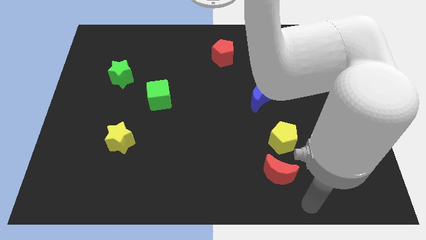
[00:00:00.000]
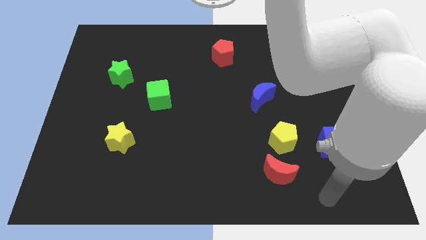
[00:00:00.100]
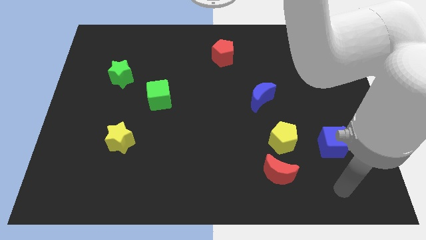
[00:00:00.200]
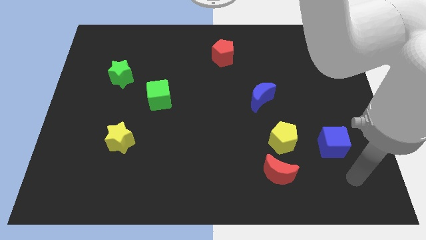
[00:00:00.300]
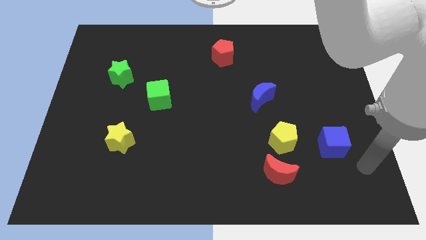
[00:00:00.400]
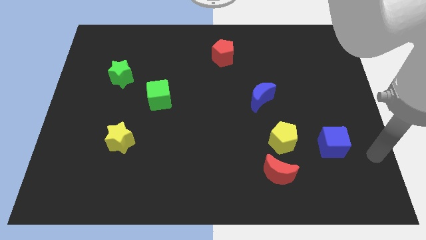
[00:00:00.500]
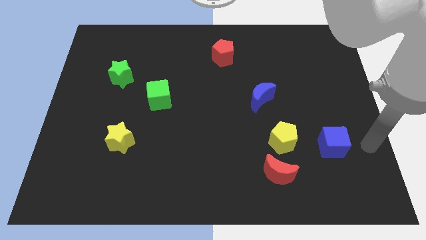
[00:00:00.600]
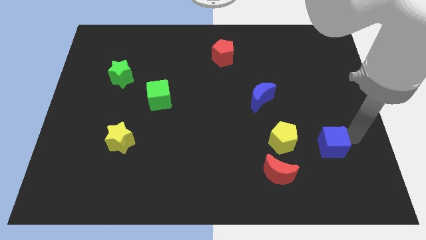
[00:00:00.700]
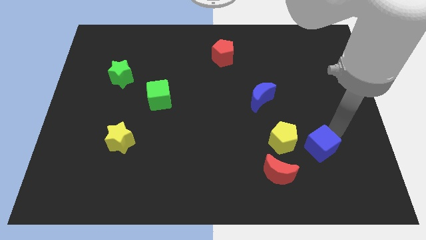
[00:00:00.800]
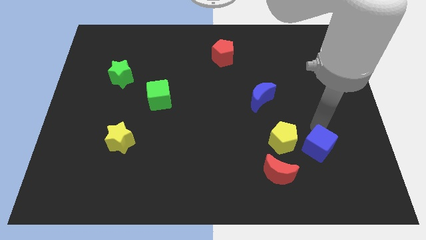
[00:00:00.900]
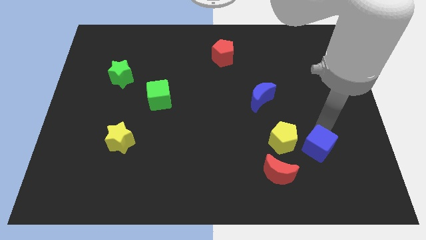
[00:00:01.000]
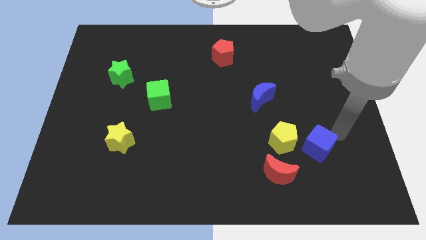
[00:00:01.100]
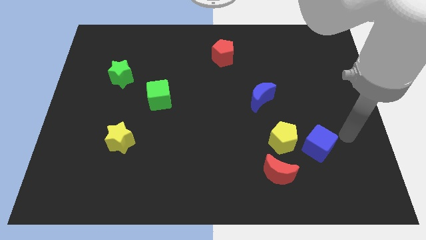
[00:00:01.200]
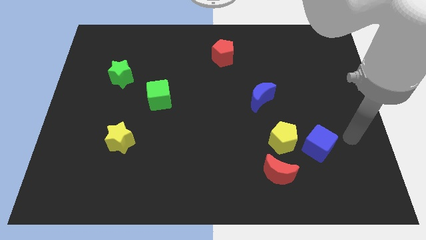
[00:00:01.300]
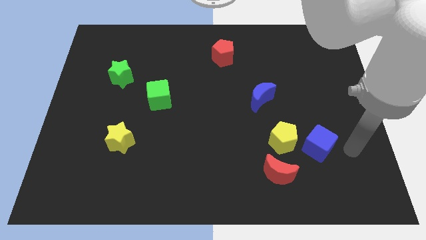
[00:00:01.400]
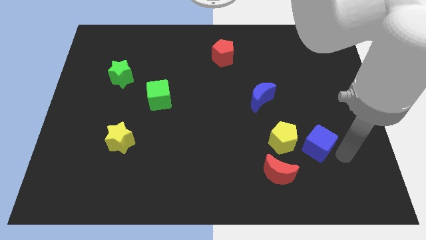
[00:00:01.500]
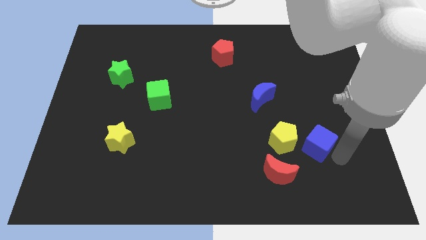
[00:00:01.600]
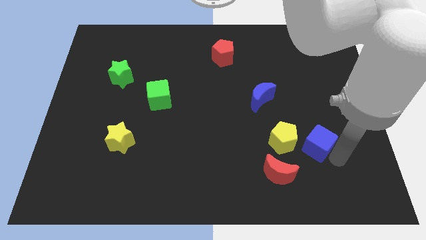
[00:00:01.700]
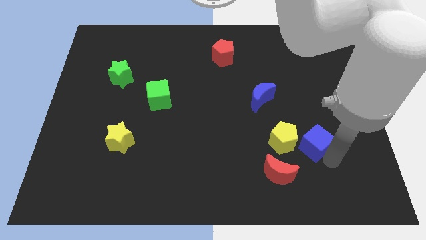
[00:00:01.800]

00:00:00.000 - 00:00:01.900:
move blue cube towards yellow pentagon

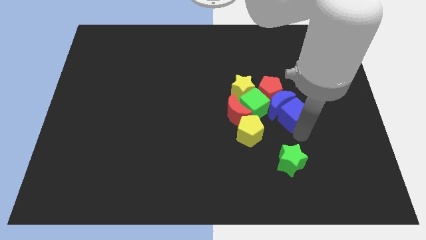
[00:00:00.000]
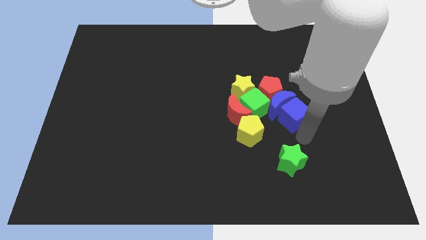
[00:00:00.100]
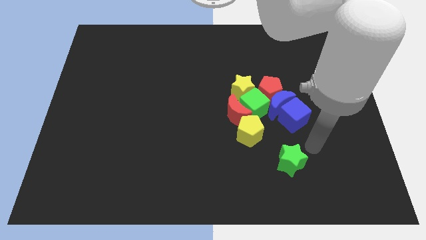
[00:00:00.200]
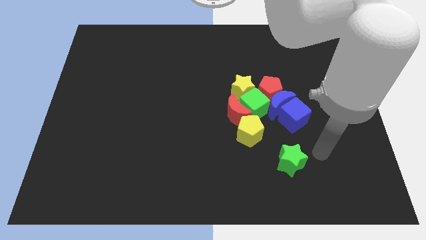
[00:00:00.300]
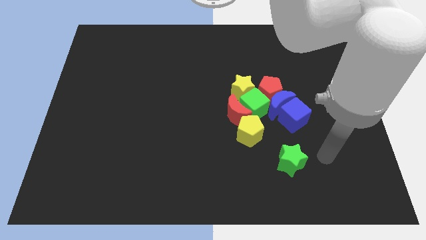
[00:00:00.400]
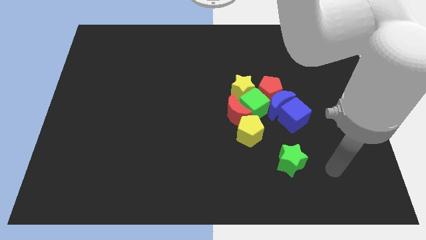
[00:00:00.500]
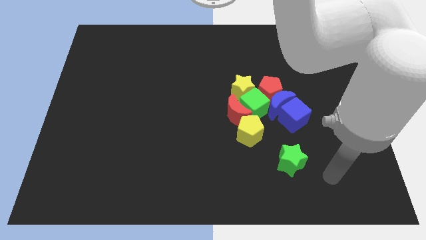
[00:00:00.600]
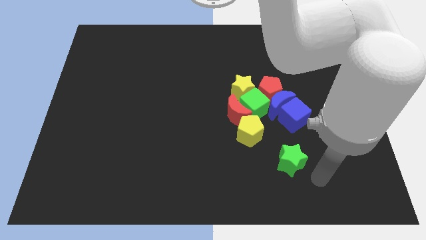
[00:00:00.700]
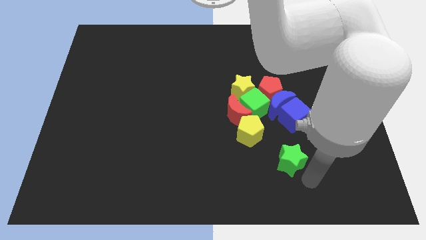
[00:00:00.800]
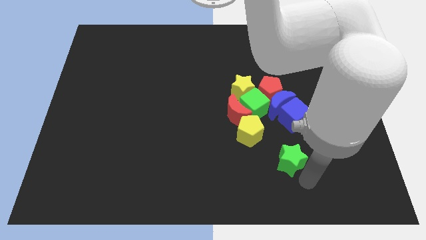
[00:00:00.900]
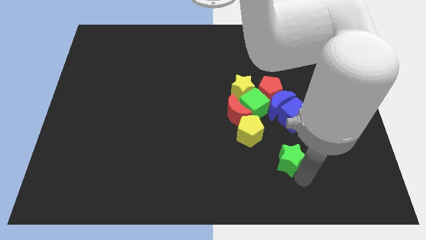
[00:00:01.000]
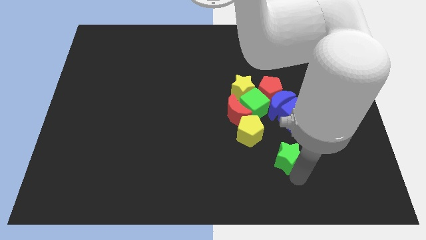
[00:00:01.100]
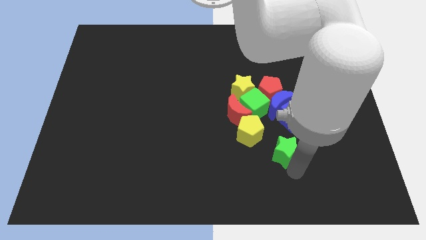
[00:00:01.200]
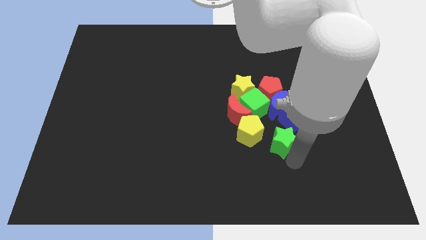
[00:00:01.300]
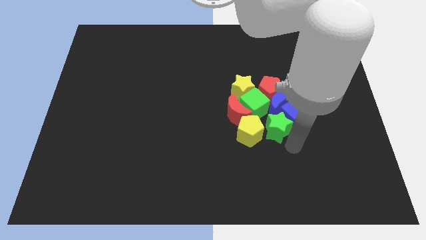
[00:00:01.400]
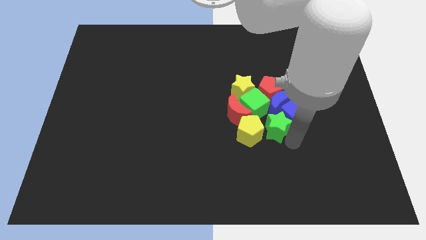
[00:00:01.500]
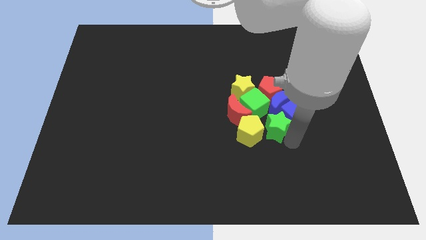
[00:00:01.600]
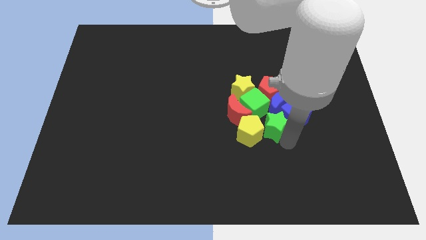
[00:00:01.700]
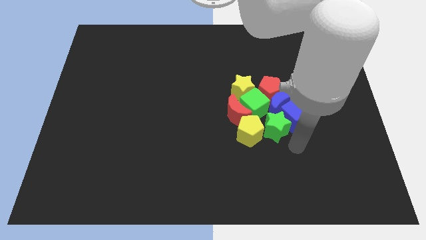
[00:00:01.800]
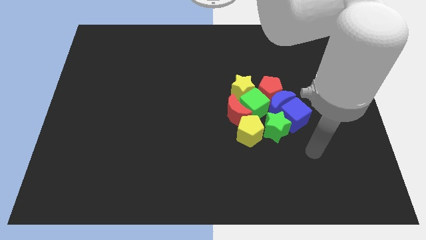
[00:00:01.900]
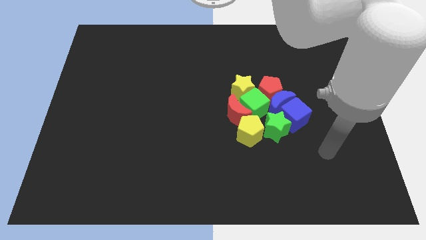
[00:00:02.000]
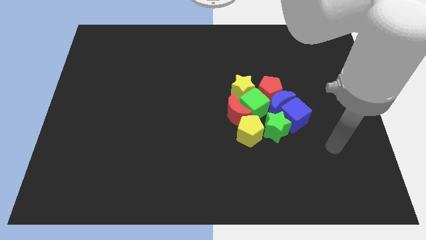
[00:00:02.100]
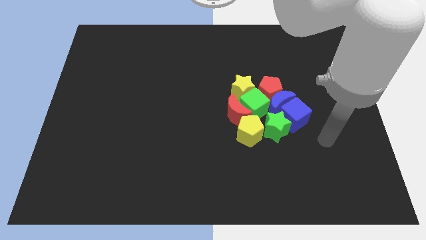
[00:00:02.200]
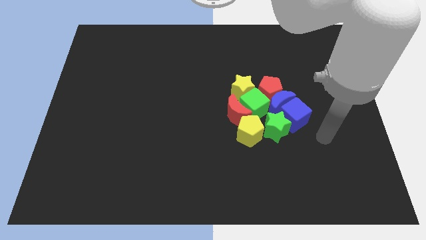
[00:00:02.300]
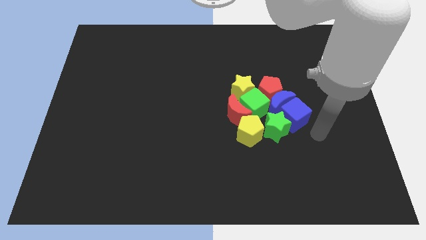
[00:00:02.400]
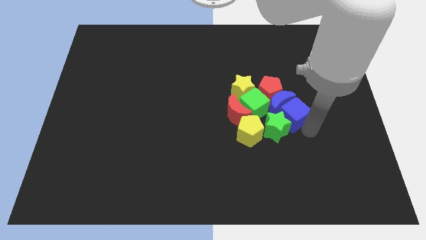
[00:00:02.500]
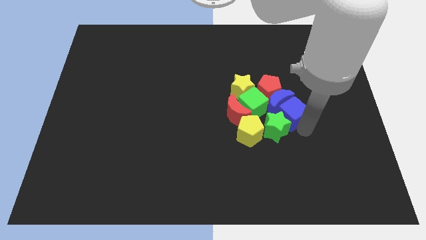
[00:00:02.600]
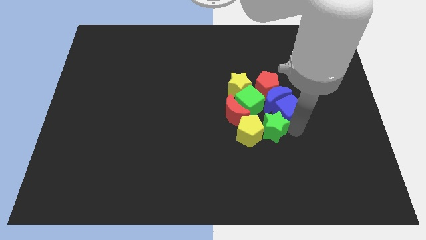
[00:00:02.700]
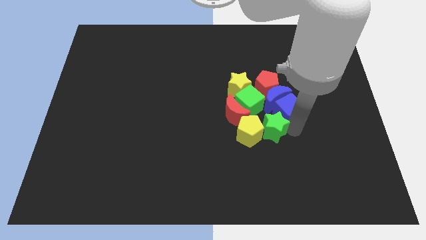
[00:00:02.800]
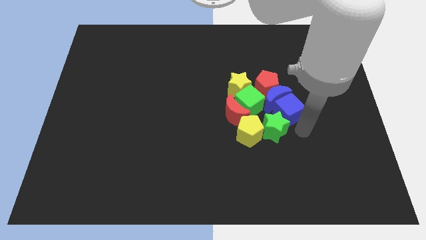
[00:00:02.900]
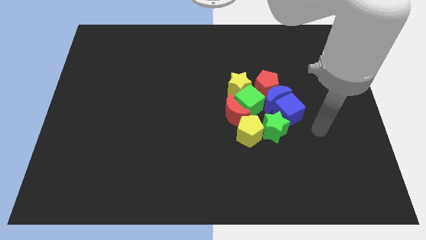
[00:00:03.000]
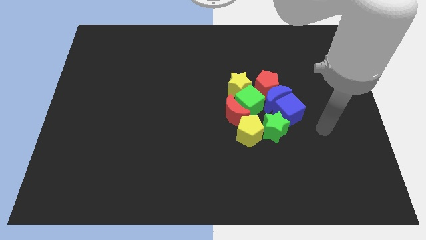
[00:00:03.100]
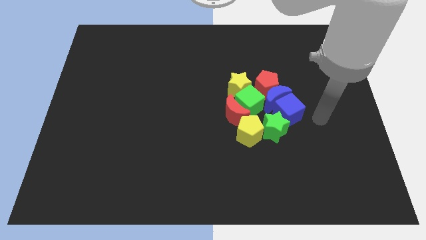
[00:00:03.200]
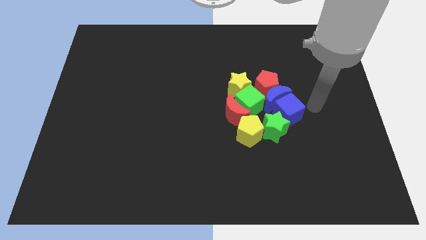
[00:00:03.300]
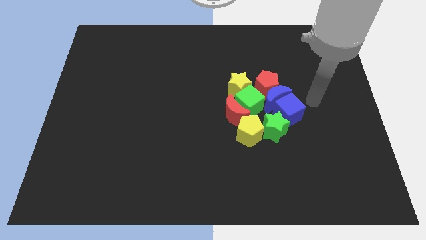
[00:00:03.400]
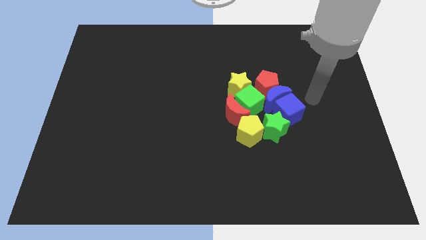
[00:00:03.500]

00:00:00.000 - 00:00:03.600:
move the green star slightly towards the top side of the board

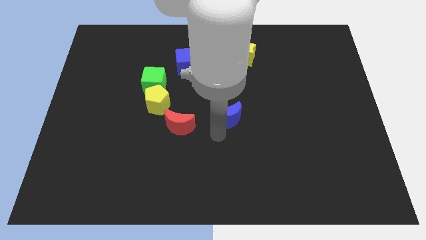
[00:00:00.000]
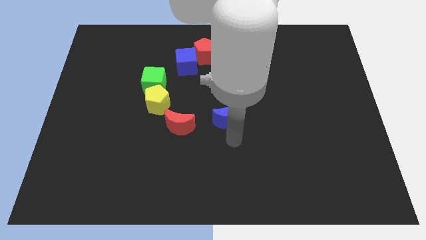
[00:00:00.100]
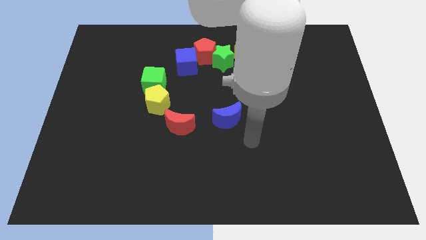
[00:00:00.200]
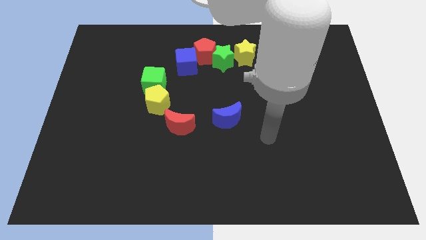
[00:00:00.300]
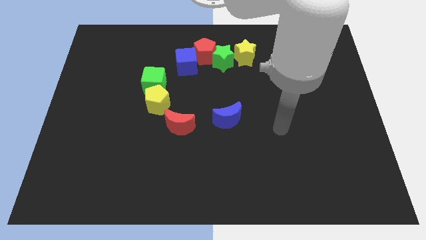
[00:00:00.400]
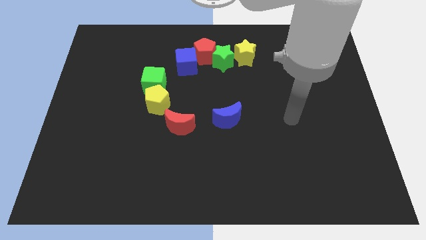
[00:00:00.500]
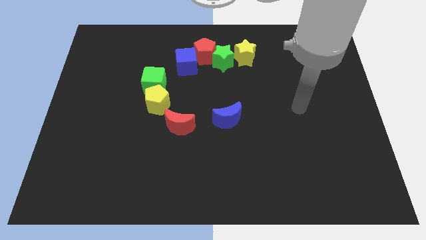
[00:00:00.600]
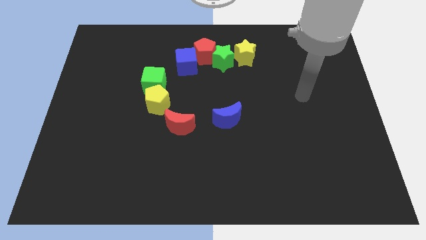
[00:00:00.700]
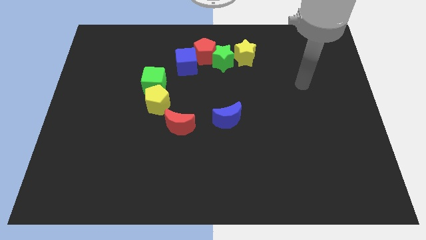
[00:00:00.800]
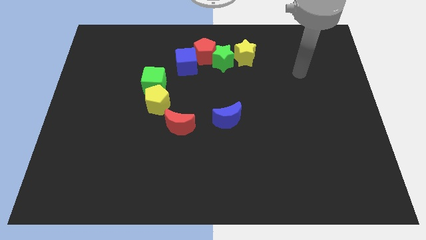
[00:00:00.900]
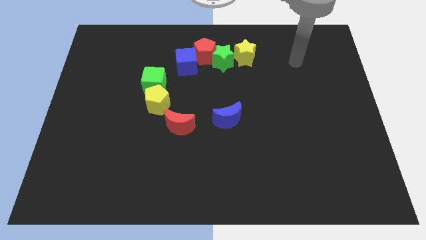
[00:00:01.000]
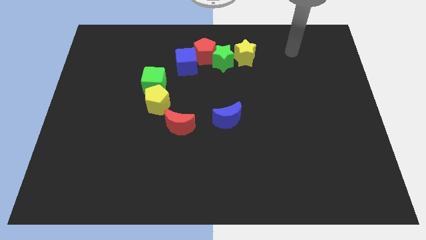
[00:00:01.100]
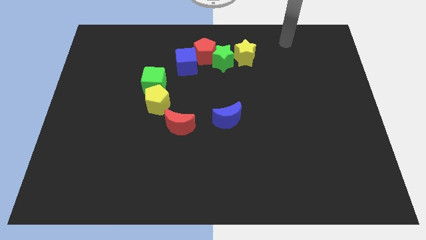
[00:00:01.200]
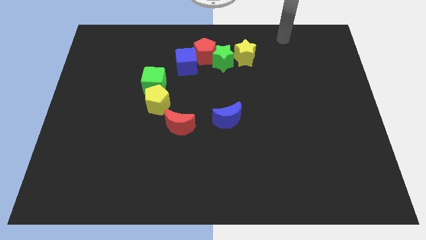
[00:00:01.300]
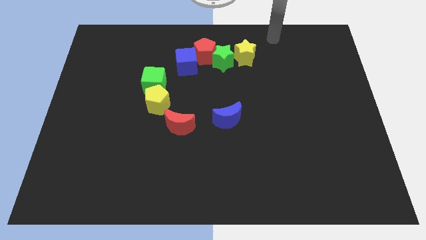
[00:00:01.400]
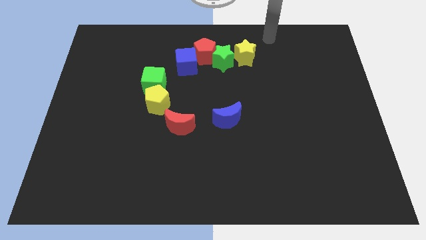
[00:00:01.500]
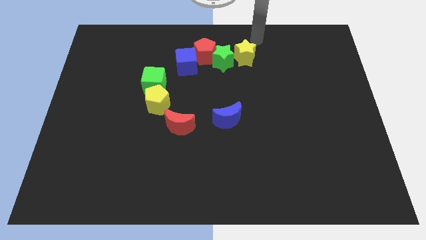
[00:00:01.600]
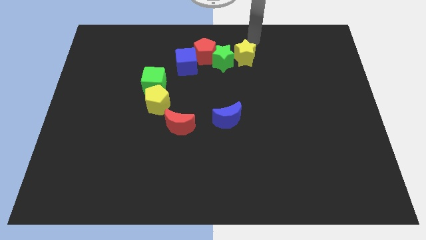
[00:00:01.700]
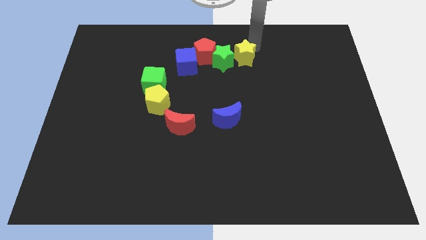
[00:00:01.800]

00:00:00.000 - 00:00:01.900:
move the arm top right of the yellow star

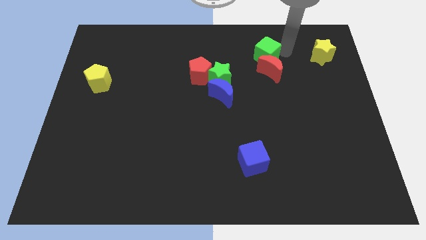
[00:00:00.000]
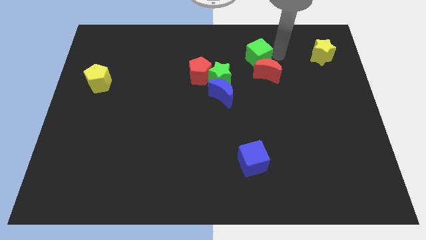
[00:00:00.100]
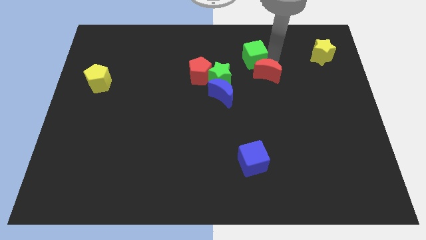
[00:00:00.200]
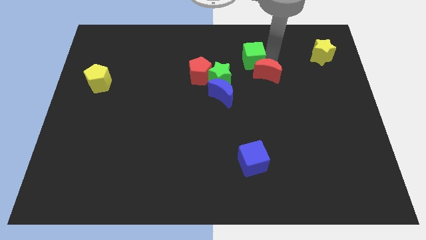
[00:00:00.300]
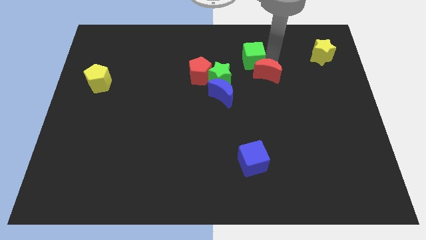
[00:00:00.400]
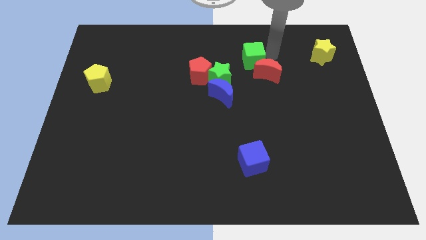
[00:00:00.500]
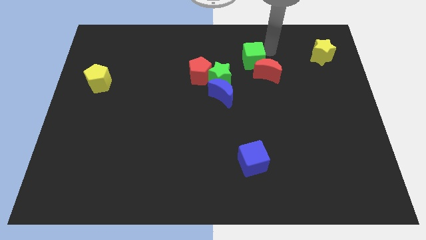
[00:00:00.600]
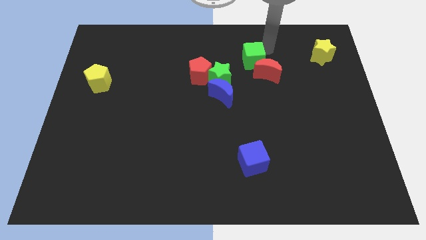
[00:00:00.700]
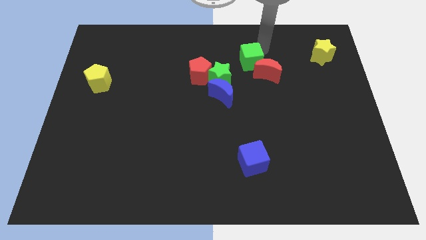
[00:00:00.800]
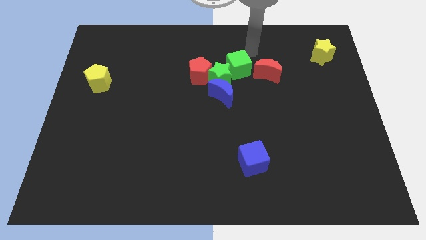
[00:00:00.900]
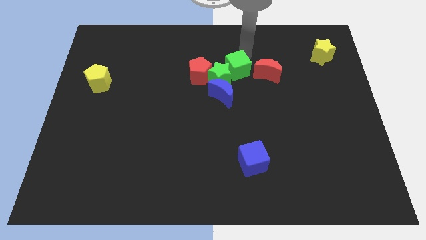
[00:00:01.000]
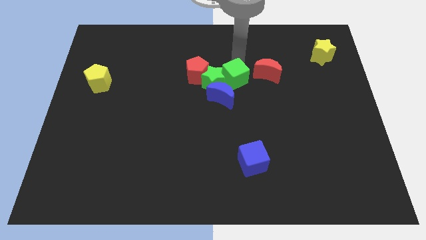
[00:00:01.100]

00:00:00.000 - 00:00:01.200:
move the green cube into the green star

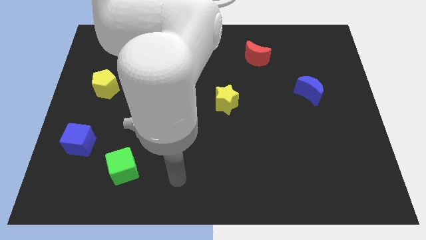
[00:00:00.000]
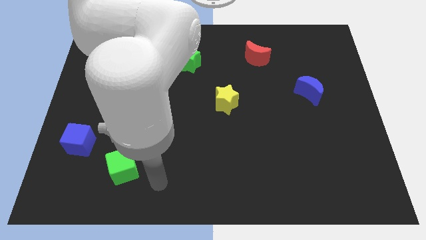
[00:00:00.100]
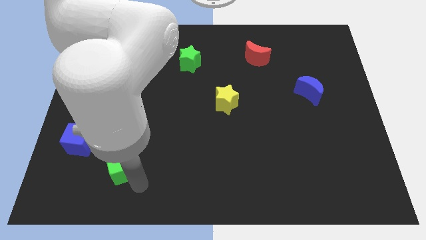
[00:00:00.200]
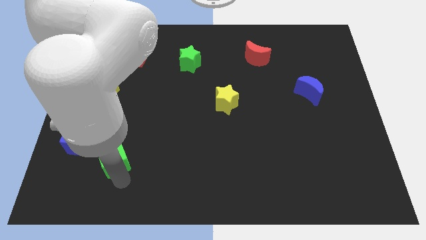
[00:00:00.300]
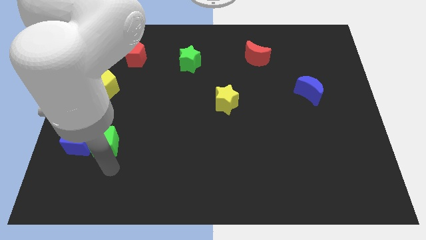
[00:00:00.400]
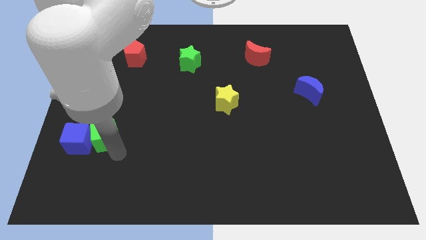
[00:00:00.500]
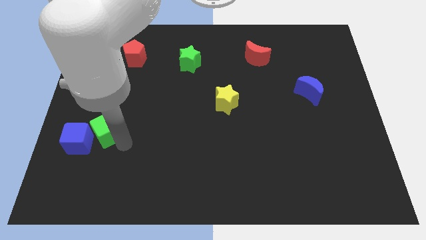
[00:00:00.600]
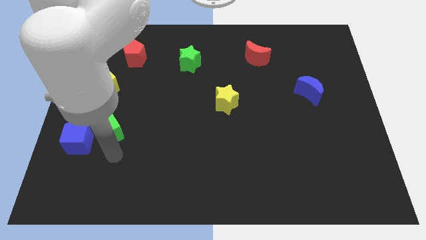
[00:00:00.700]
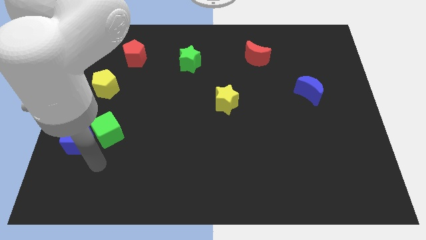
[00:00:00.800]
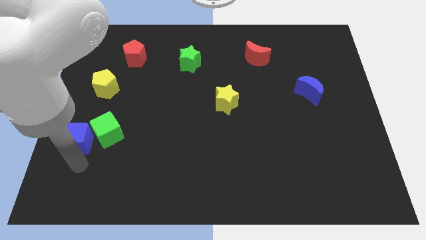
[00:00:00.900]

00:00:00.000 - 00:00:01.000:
push green cube towards yellow pentagon
